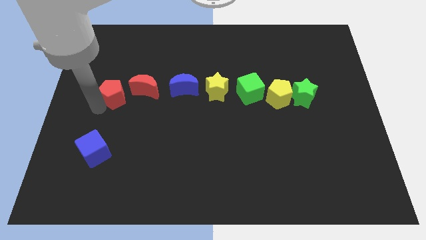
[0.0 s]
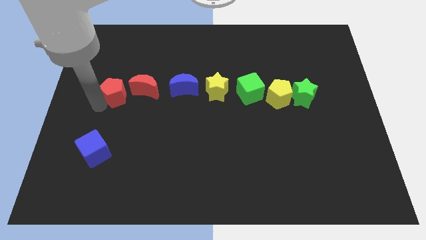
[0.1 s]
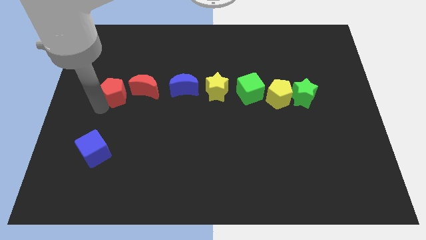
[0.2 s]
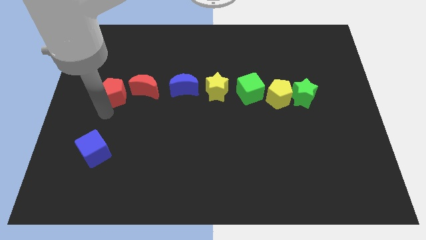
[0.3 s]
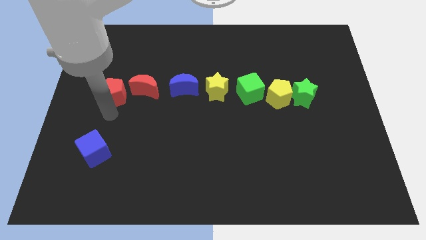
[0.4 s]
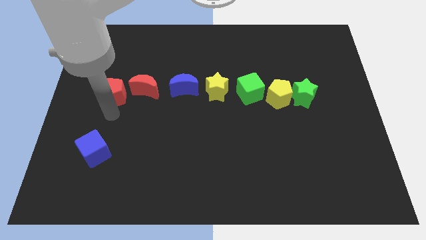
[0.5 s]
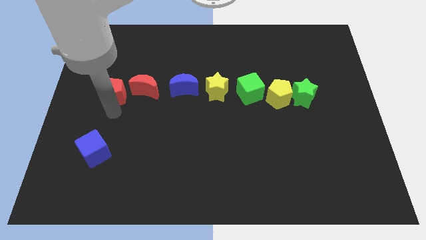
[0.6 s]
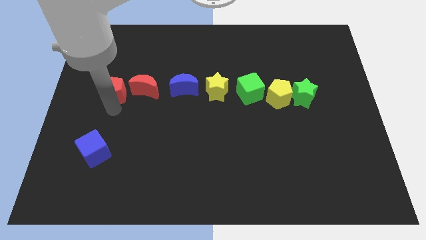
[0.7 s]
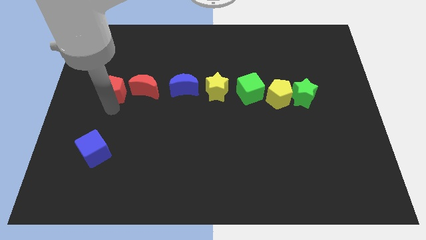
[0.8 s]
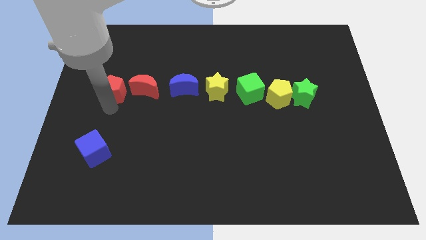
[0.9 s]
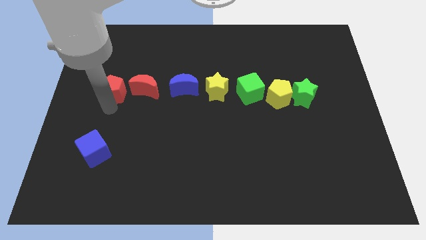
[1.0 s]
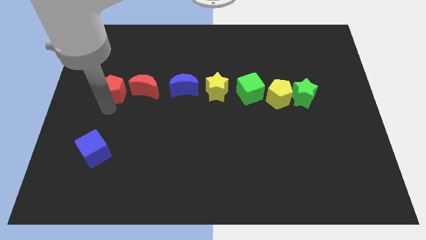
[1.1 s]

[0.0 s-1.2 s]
place the red pentagon next to red crescent

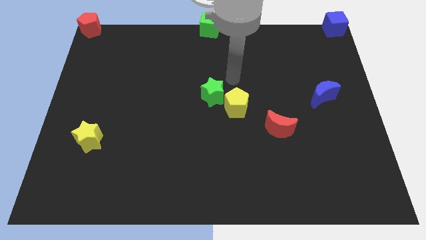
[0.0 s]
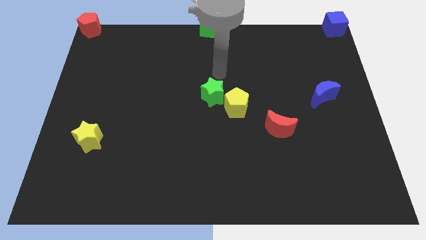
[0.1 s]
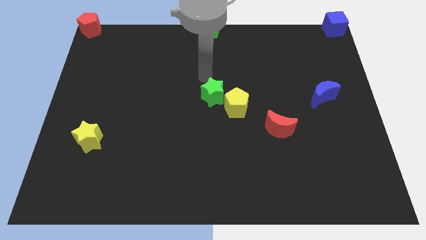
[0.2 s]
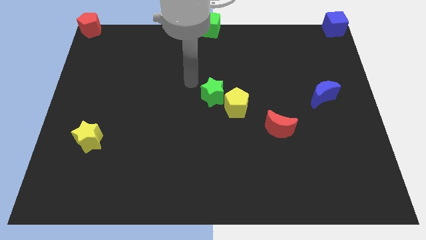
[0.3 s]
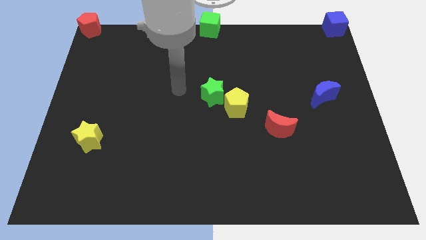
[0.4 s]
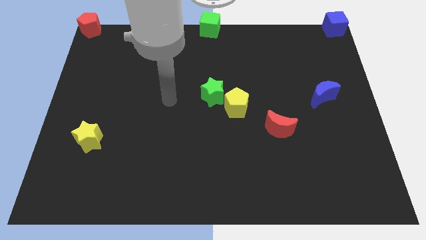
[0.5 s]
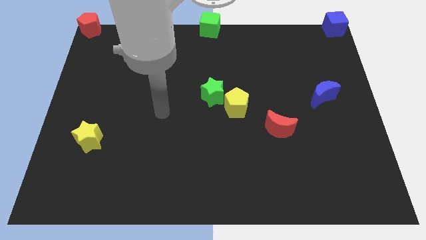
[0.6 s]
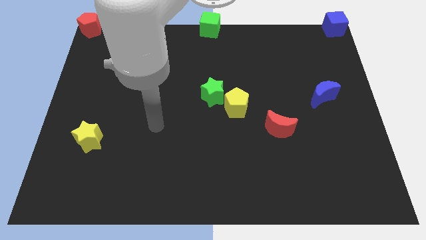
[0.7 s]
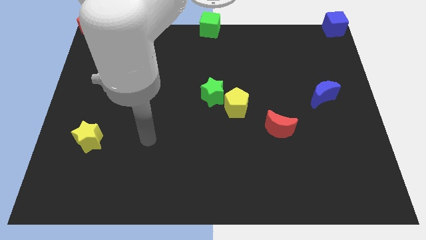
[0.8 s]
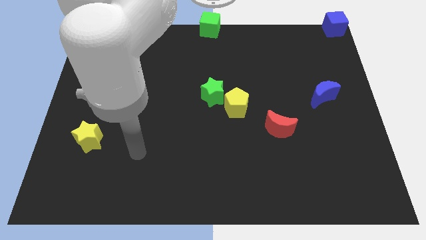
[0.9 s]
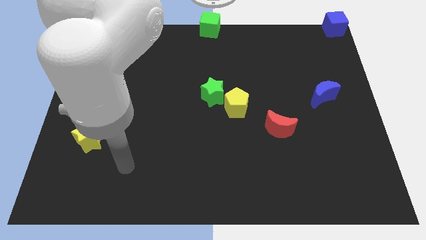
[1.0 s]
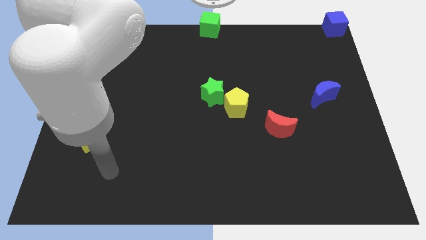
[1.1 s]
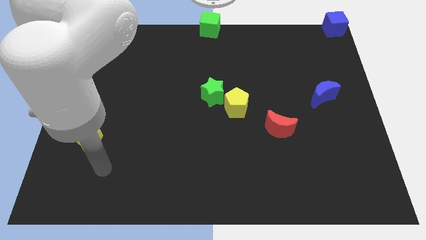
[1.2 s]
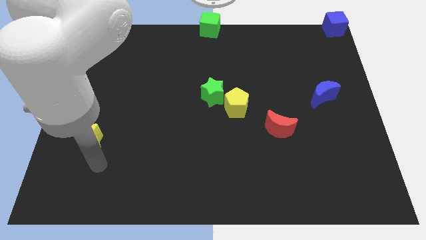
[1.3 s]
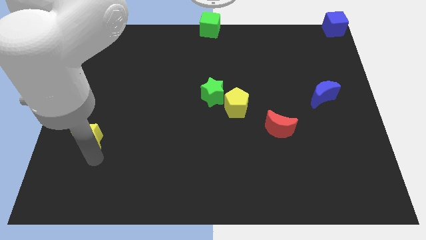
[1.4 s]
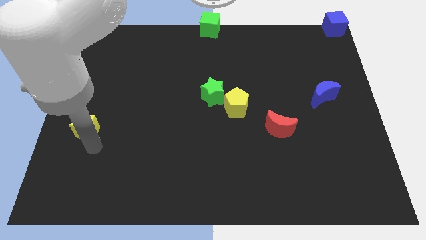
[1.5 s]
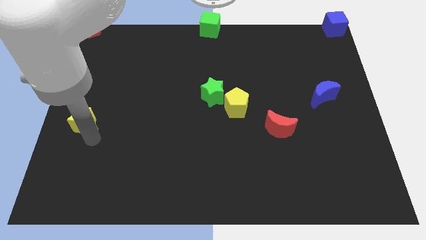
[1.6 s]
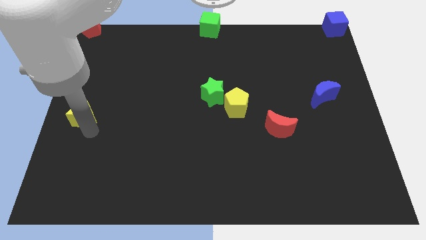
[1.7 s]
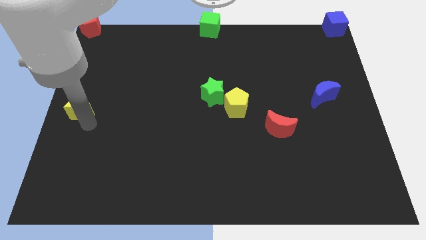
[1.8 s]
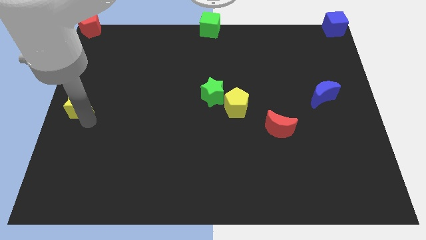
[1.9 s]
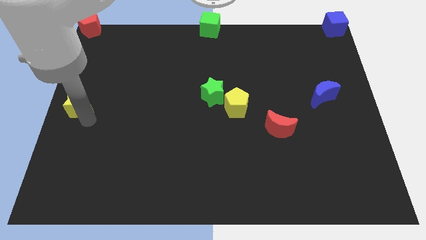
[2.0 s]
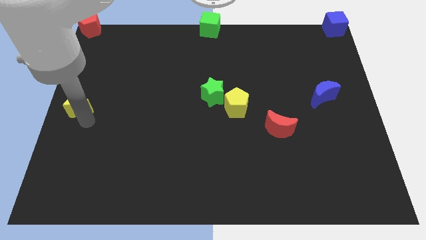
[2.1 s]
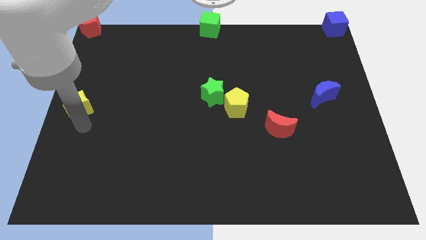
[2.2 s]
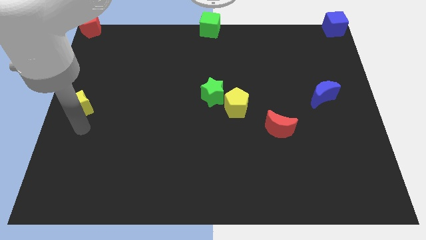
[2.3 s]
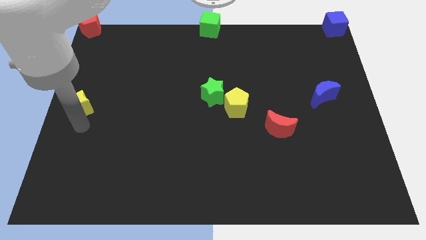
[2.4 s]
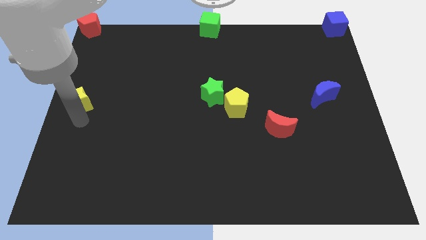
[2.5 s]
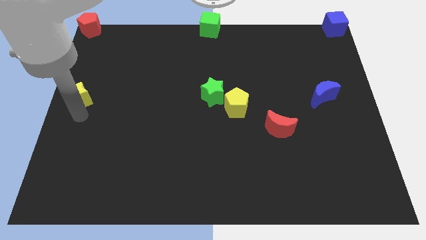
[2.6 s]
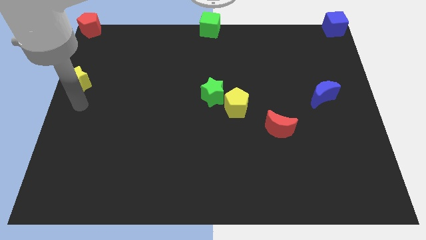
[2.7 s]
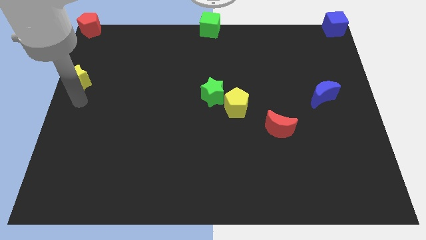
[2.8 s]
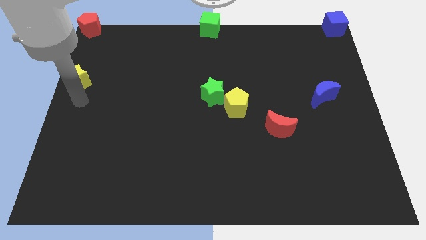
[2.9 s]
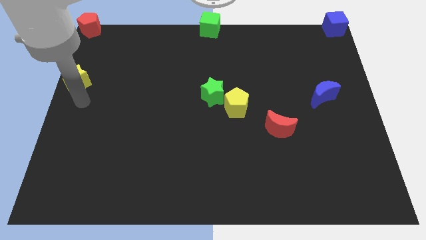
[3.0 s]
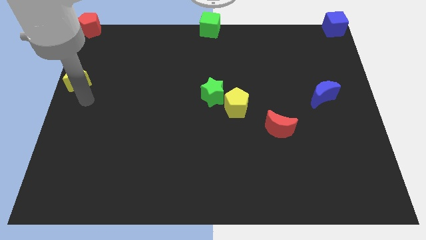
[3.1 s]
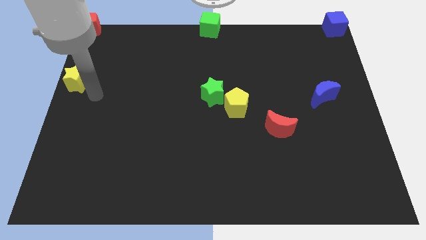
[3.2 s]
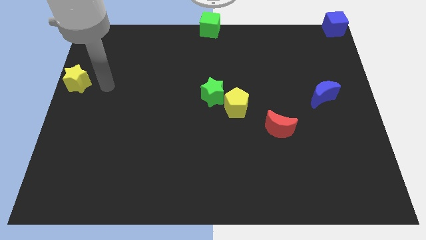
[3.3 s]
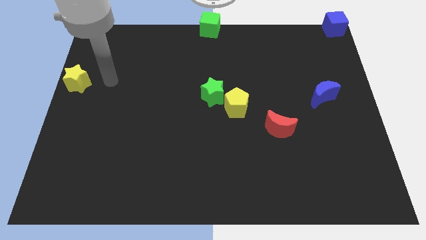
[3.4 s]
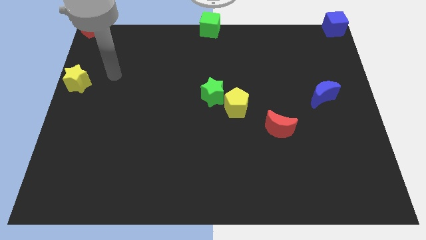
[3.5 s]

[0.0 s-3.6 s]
place the yellow star vertical below red pentagon

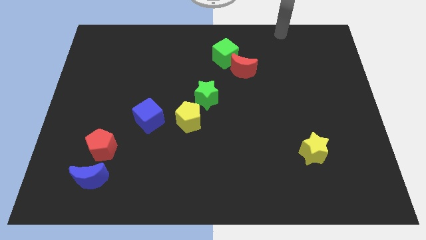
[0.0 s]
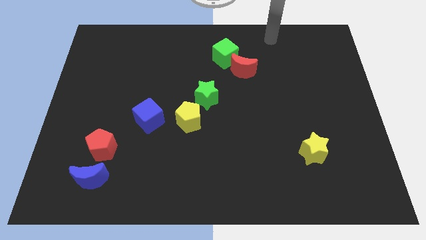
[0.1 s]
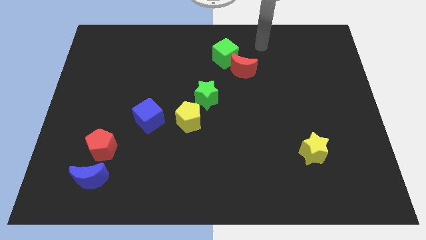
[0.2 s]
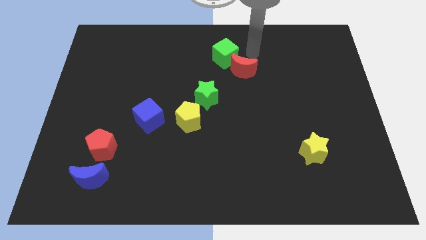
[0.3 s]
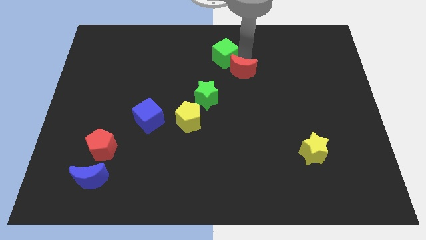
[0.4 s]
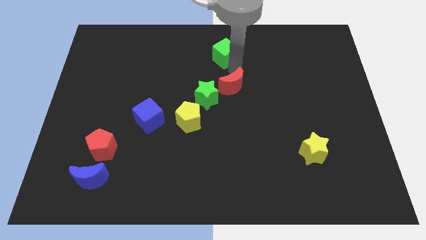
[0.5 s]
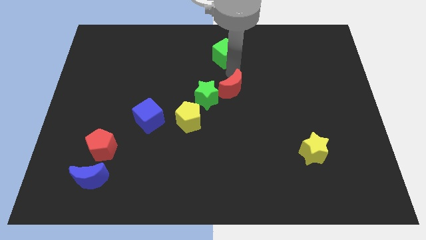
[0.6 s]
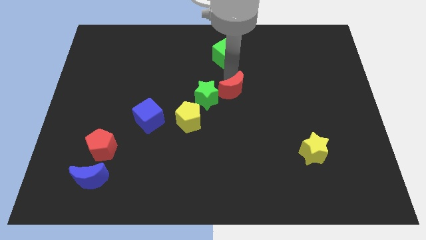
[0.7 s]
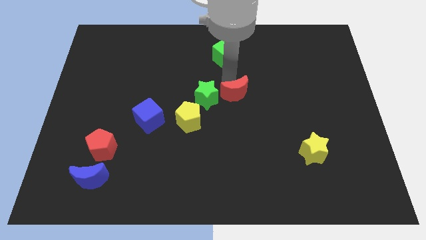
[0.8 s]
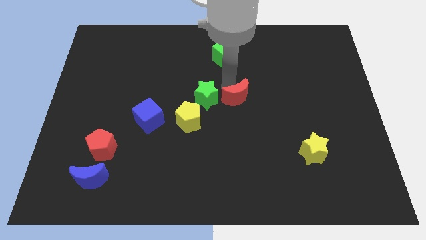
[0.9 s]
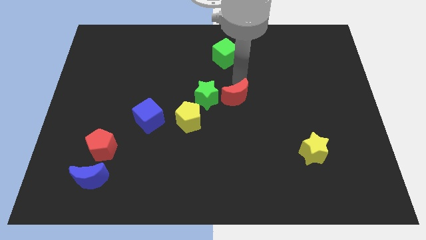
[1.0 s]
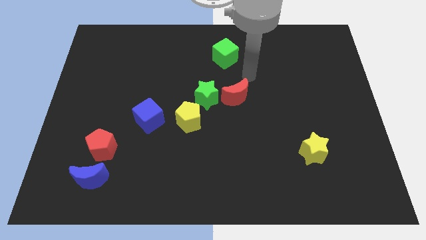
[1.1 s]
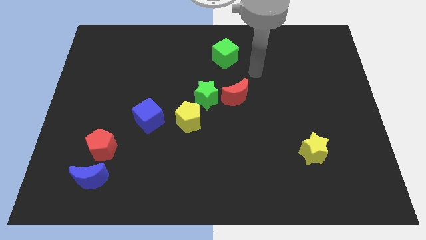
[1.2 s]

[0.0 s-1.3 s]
move the red moon to the right side of the green star

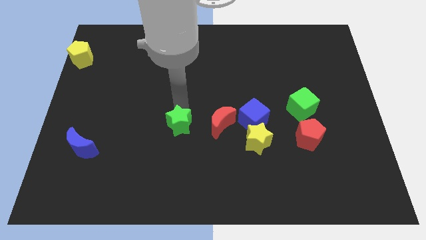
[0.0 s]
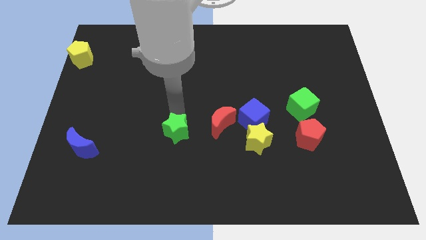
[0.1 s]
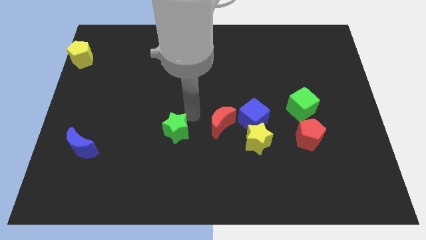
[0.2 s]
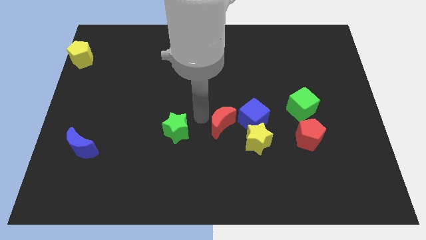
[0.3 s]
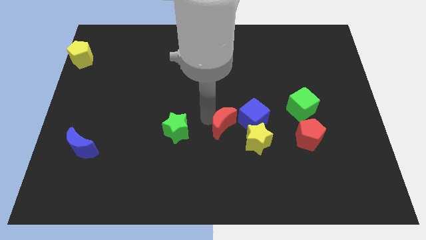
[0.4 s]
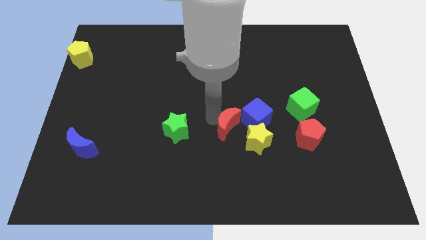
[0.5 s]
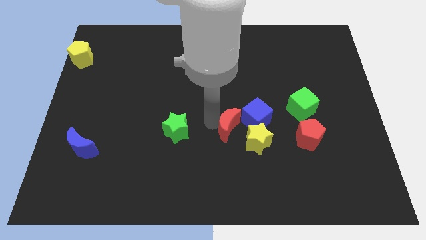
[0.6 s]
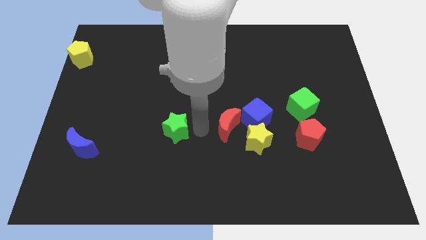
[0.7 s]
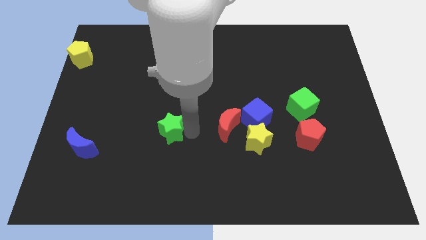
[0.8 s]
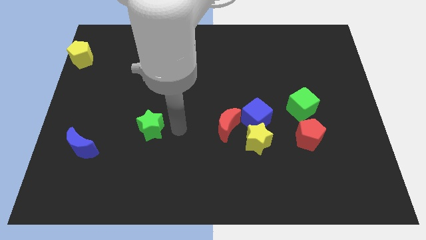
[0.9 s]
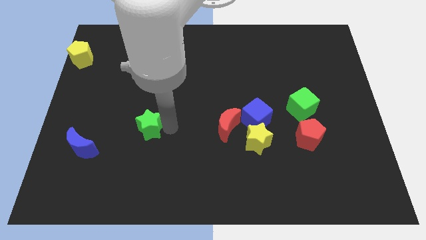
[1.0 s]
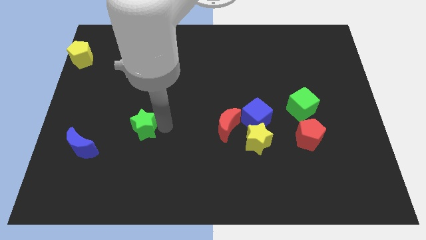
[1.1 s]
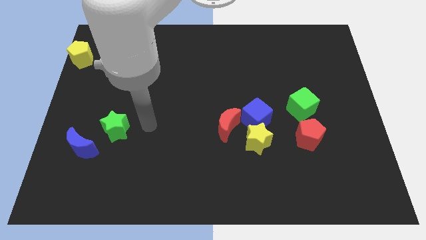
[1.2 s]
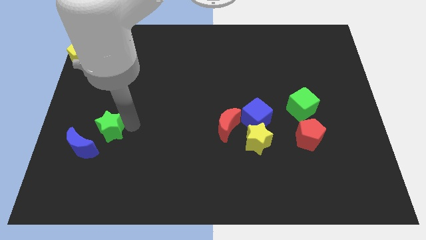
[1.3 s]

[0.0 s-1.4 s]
push the green star towards the top side of the blue crescent

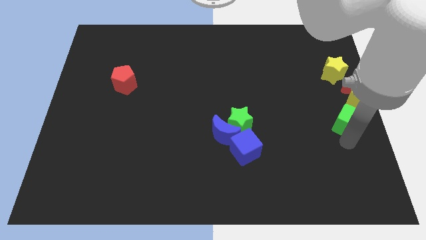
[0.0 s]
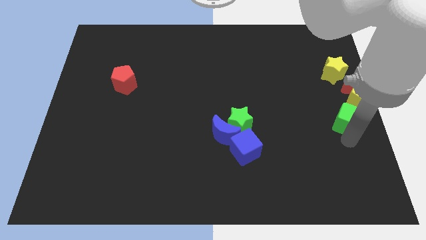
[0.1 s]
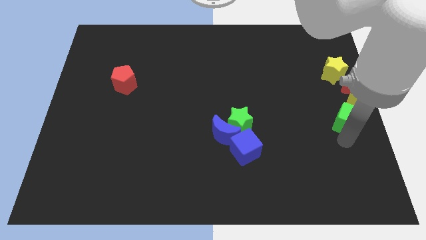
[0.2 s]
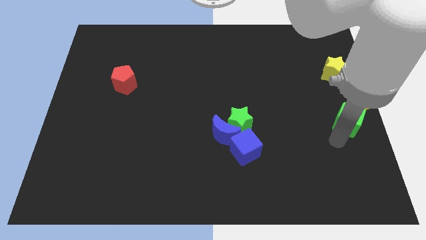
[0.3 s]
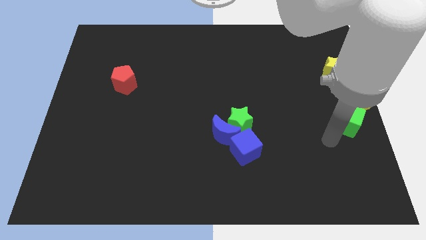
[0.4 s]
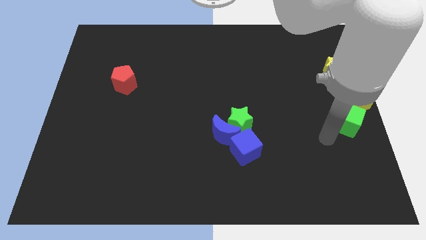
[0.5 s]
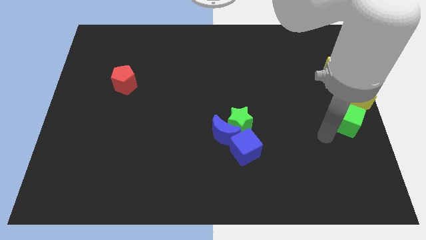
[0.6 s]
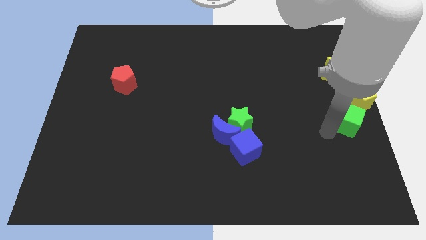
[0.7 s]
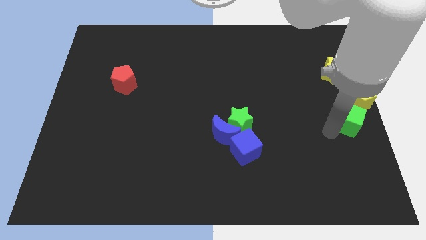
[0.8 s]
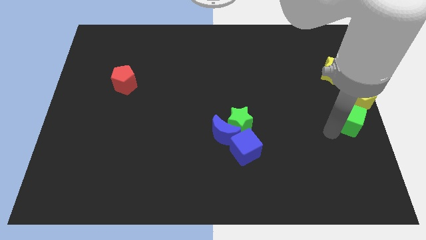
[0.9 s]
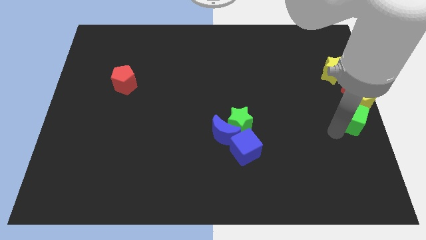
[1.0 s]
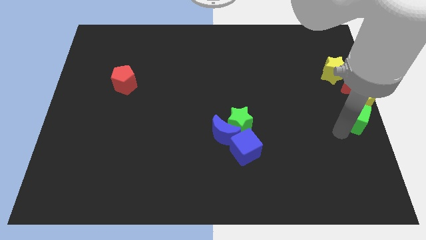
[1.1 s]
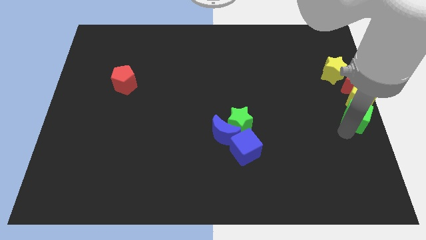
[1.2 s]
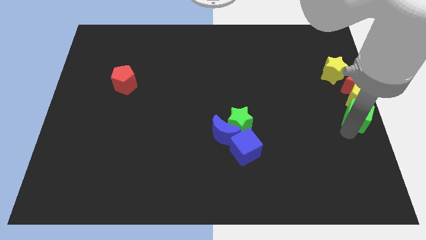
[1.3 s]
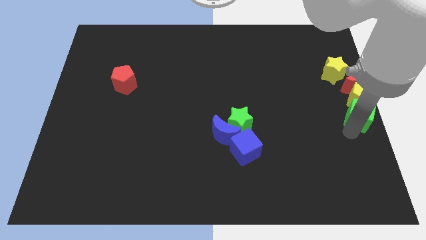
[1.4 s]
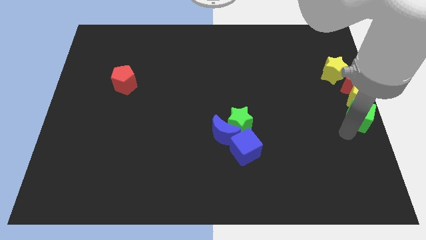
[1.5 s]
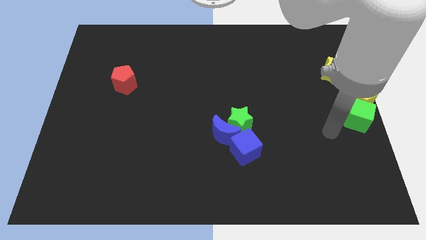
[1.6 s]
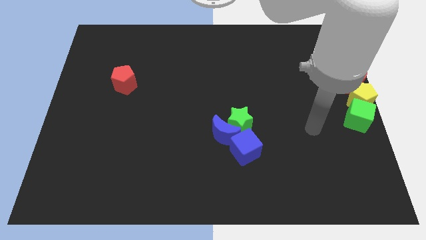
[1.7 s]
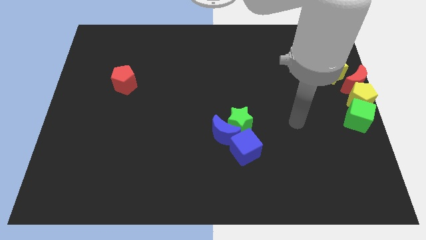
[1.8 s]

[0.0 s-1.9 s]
push the green cube to the bottom left side of the yellow pentagon
